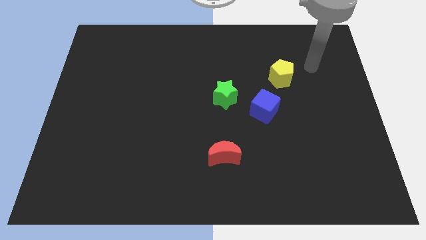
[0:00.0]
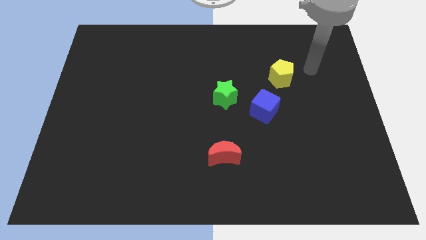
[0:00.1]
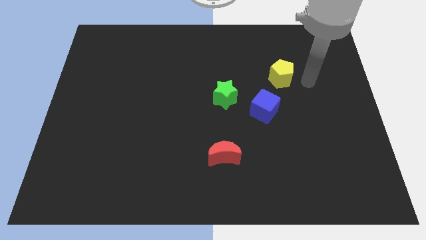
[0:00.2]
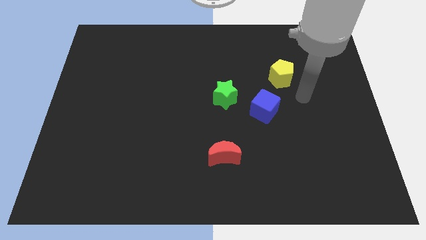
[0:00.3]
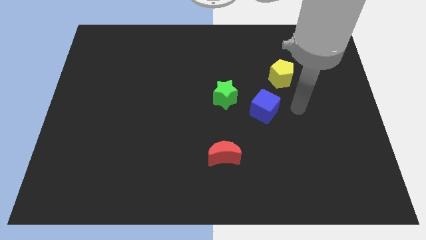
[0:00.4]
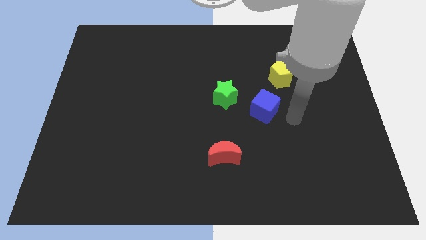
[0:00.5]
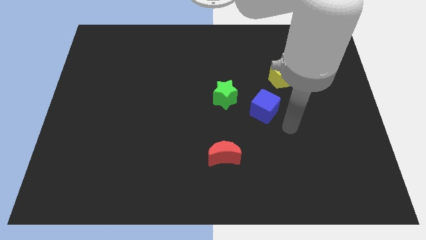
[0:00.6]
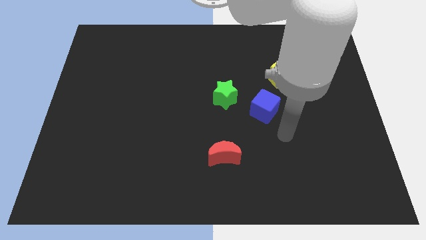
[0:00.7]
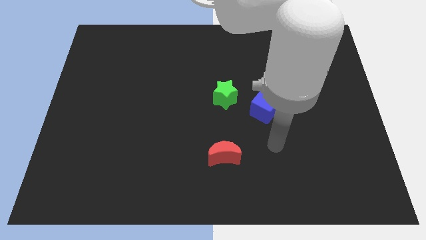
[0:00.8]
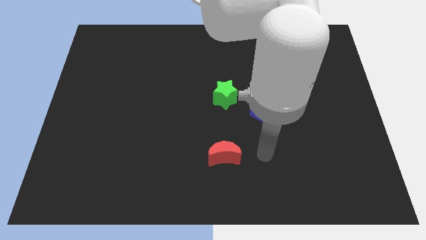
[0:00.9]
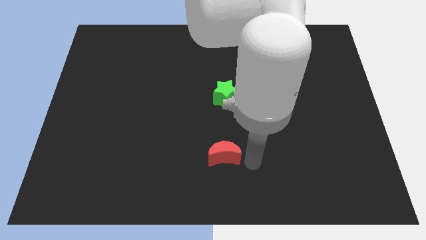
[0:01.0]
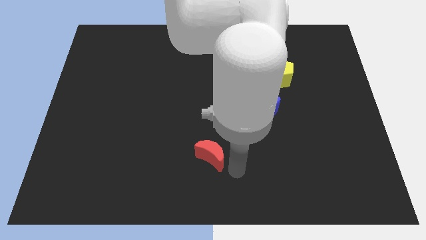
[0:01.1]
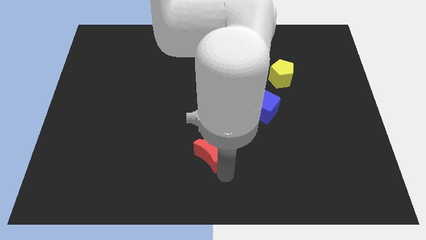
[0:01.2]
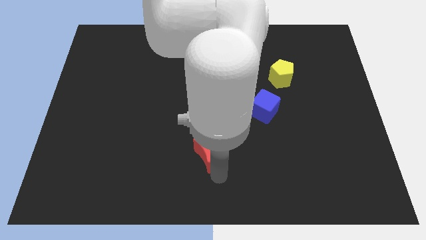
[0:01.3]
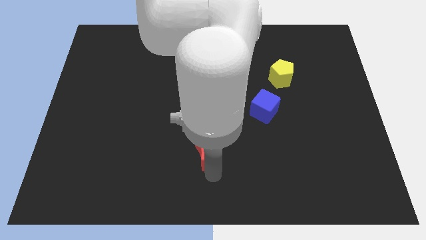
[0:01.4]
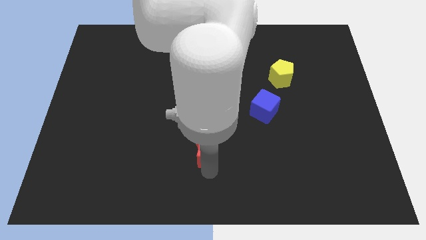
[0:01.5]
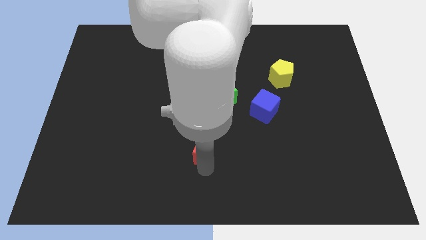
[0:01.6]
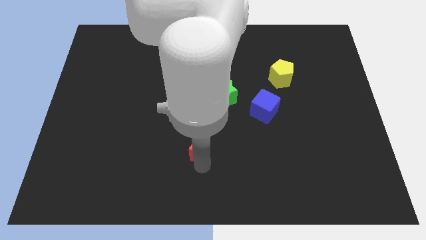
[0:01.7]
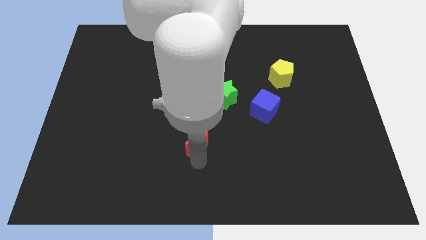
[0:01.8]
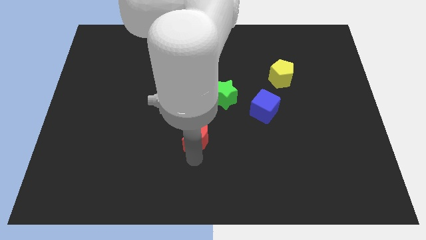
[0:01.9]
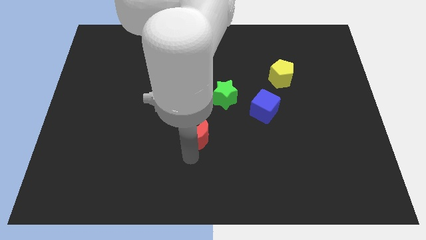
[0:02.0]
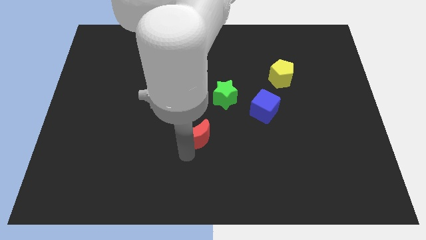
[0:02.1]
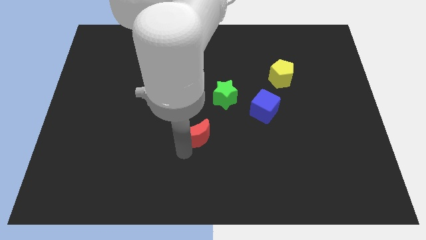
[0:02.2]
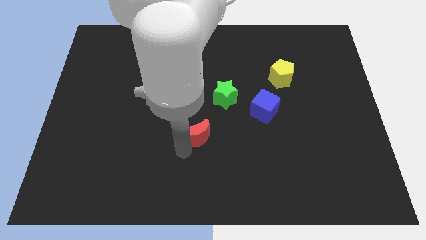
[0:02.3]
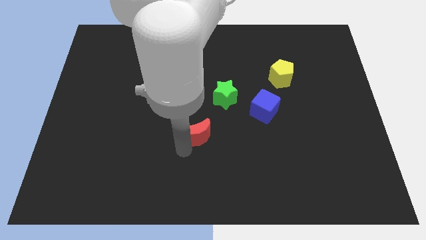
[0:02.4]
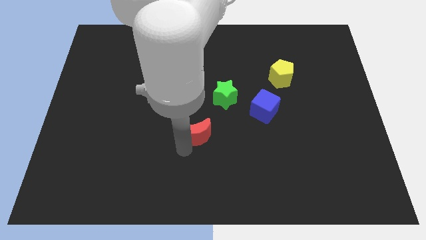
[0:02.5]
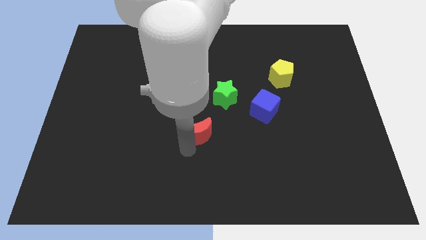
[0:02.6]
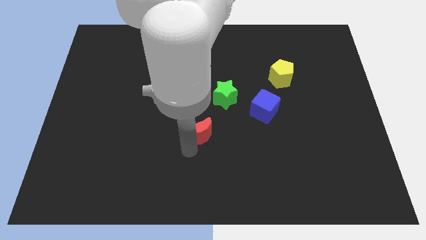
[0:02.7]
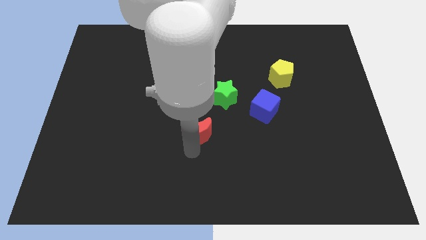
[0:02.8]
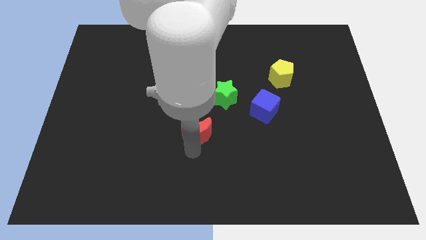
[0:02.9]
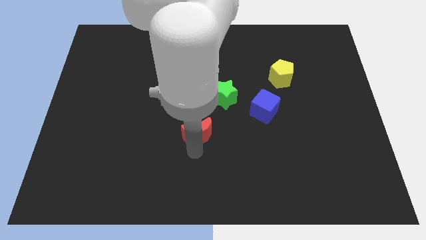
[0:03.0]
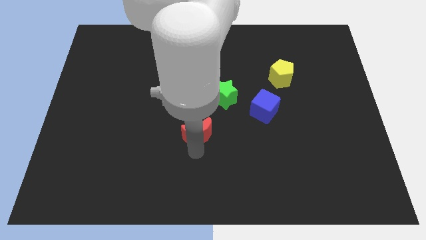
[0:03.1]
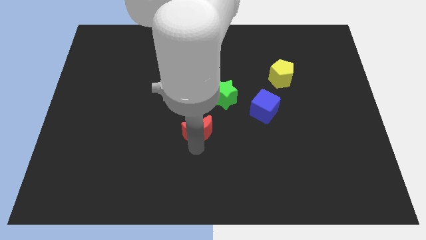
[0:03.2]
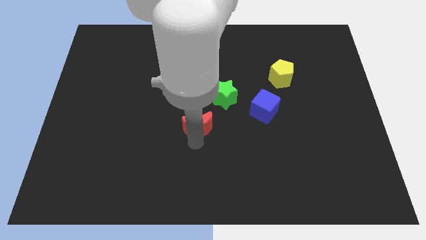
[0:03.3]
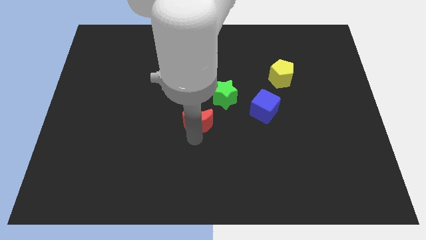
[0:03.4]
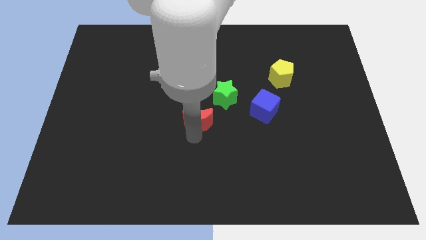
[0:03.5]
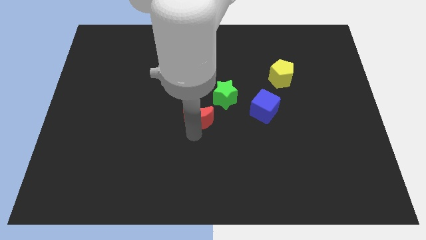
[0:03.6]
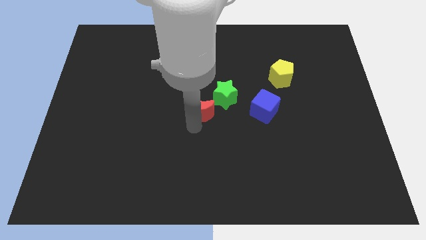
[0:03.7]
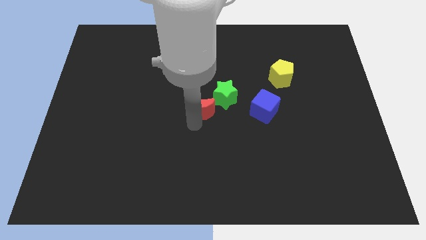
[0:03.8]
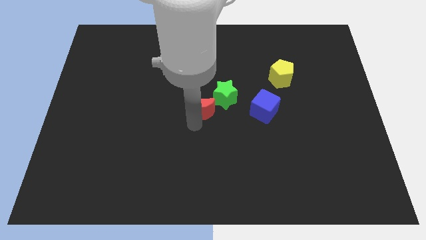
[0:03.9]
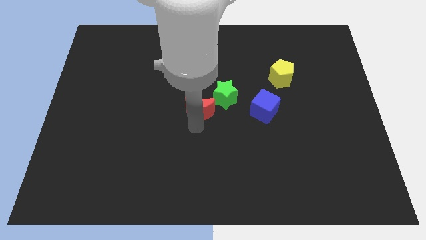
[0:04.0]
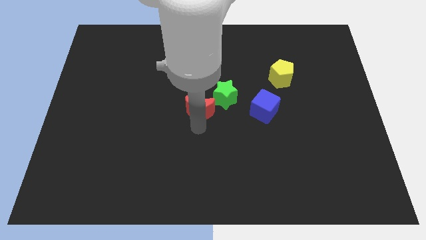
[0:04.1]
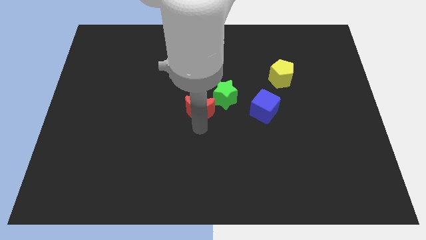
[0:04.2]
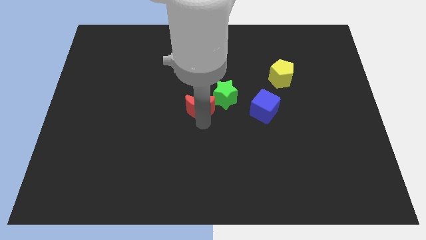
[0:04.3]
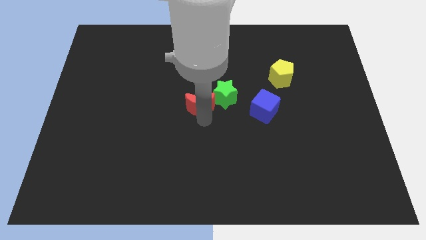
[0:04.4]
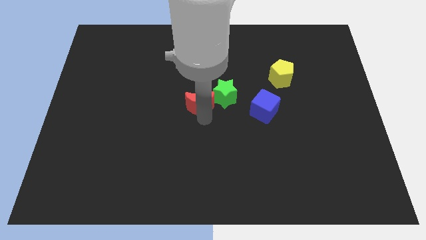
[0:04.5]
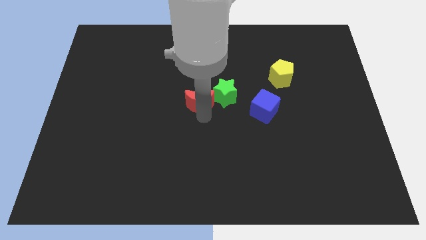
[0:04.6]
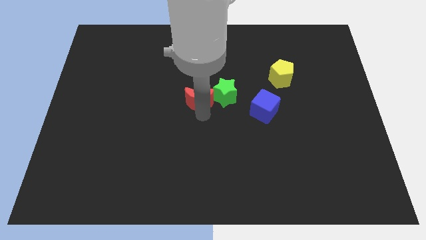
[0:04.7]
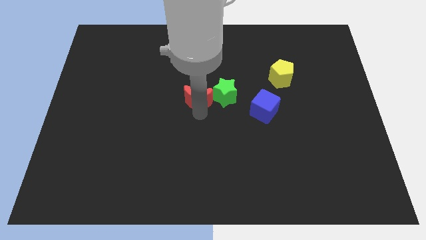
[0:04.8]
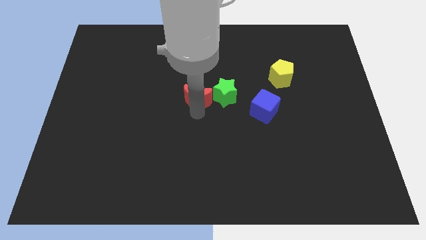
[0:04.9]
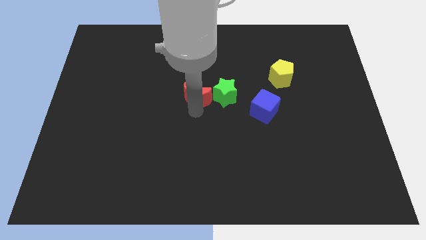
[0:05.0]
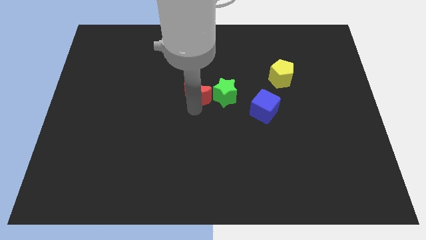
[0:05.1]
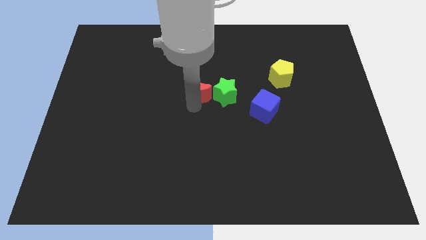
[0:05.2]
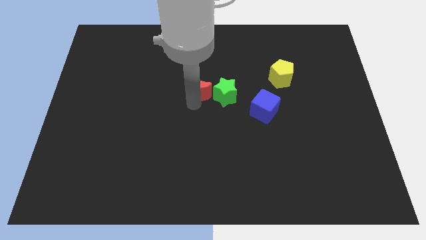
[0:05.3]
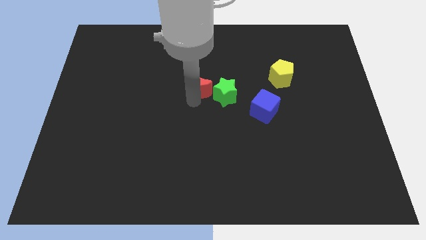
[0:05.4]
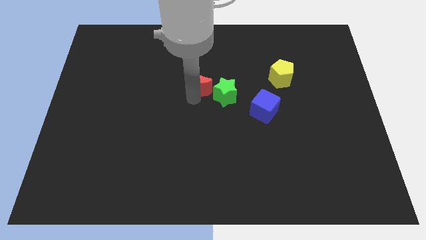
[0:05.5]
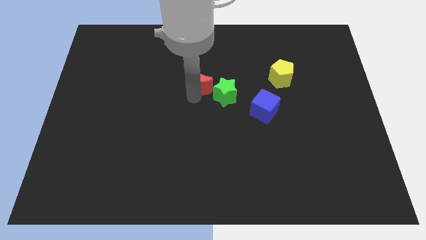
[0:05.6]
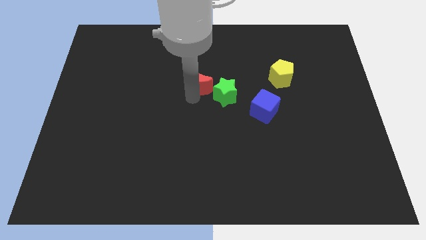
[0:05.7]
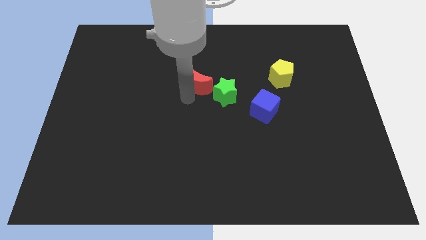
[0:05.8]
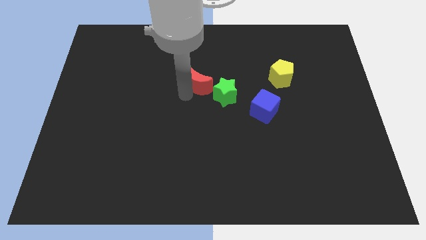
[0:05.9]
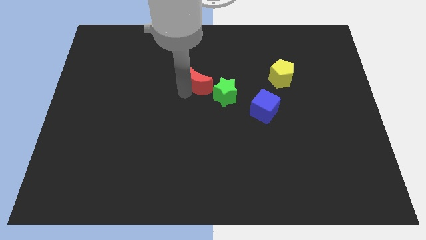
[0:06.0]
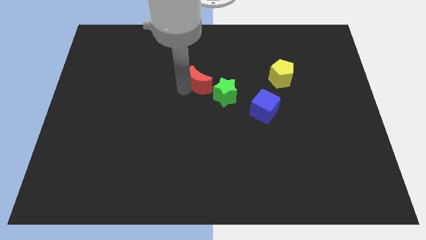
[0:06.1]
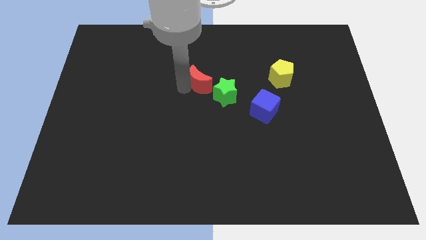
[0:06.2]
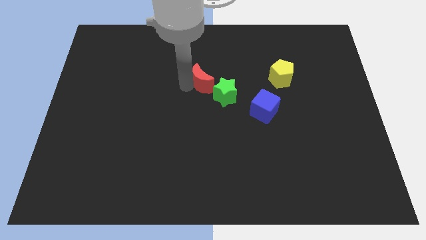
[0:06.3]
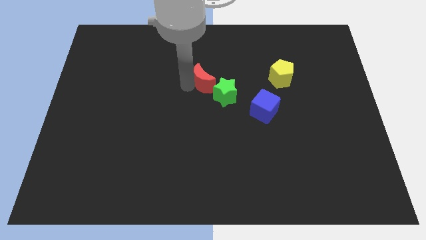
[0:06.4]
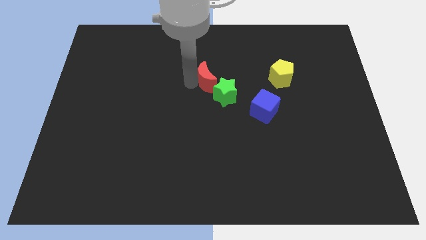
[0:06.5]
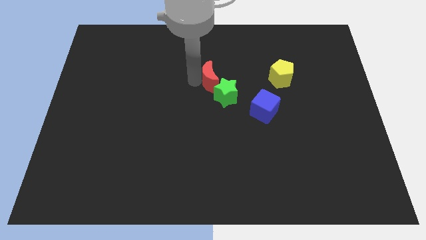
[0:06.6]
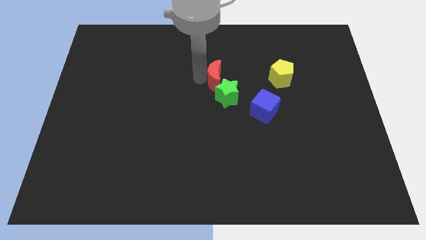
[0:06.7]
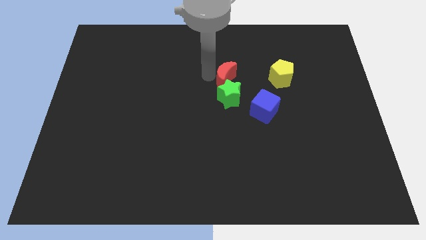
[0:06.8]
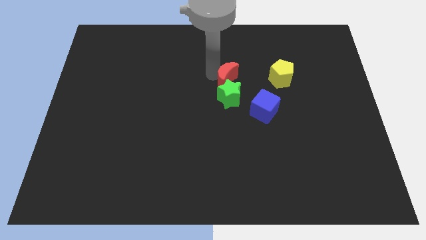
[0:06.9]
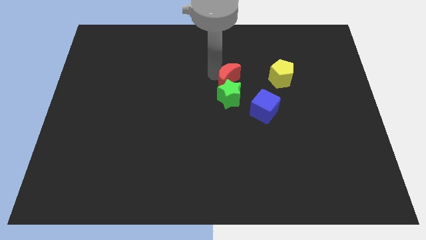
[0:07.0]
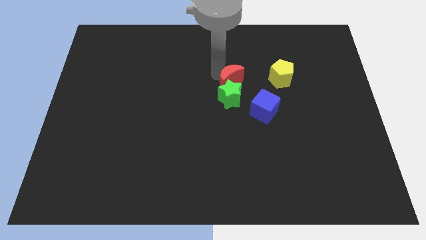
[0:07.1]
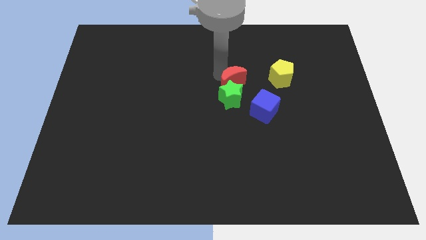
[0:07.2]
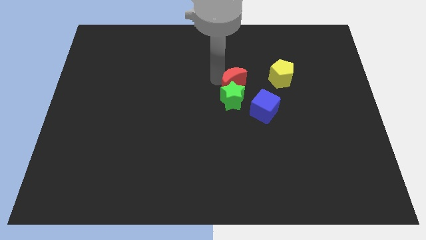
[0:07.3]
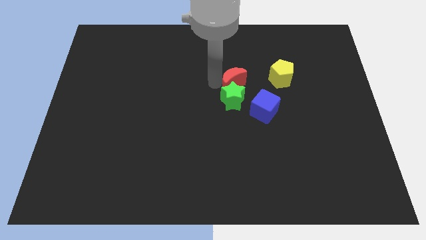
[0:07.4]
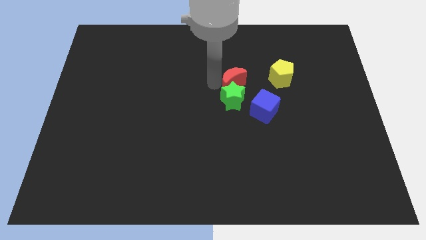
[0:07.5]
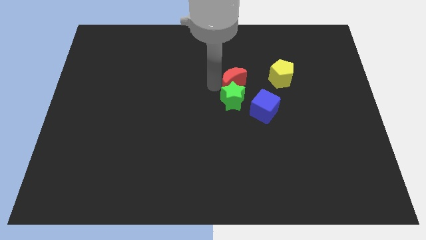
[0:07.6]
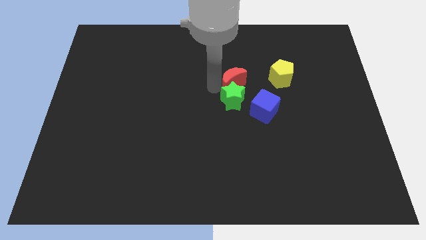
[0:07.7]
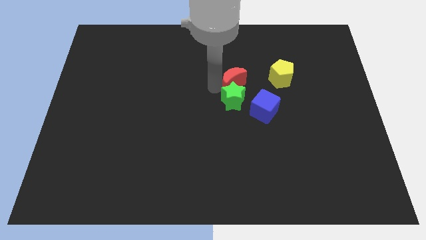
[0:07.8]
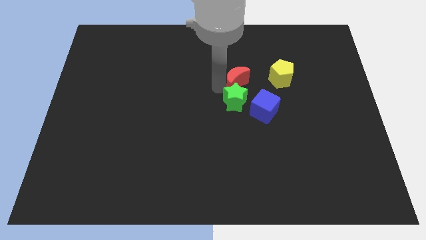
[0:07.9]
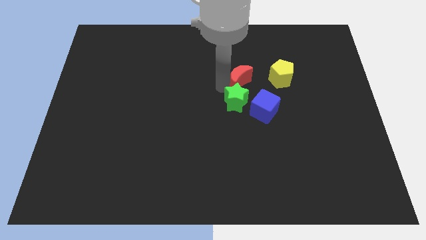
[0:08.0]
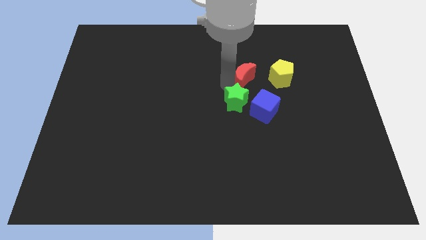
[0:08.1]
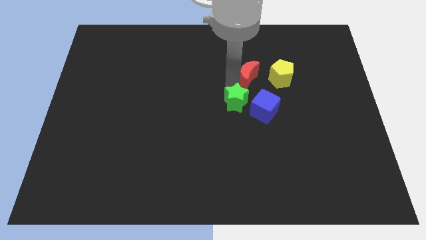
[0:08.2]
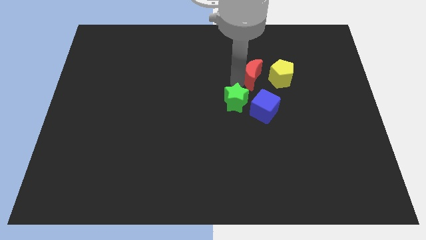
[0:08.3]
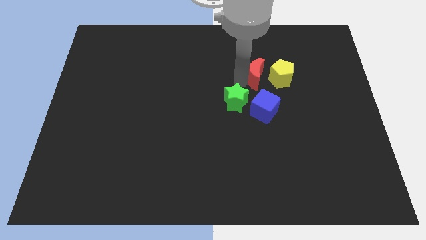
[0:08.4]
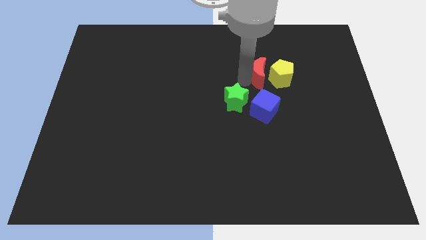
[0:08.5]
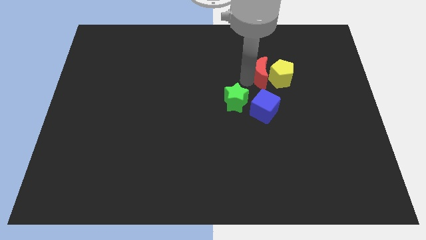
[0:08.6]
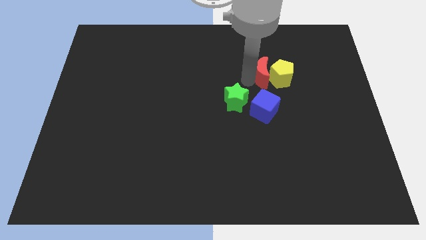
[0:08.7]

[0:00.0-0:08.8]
slide the red block towards the yellow block
